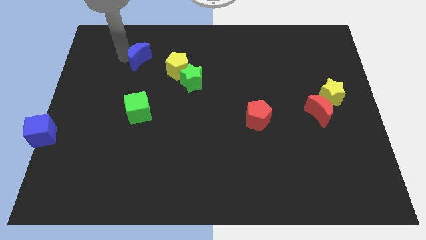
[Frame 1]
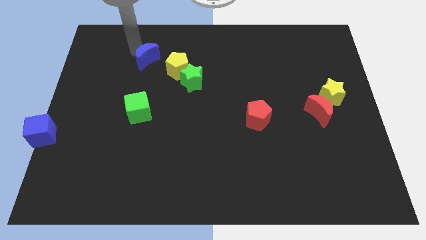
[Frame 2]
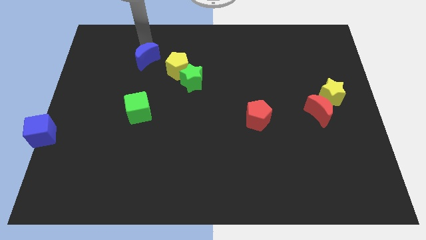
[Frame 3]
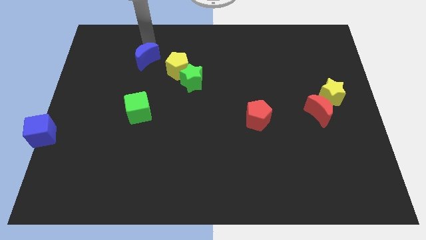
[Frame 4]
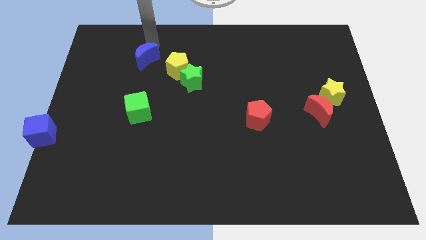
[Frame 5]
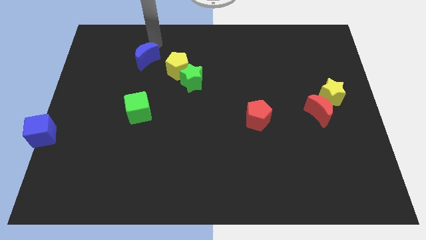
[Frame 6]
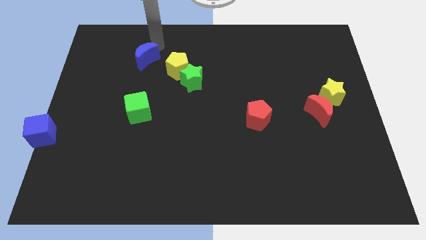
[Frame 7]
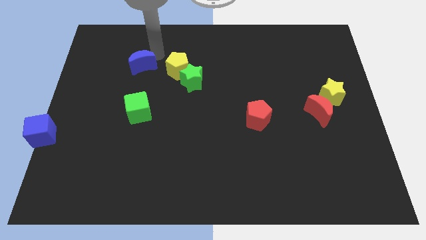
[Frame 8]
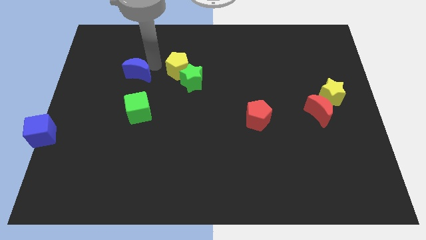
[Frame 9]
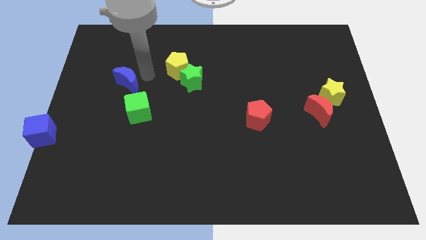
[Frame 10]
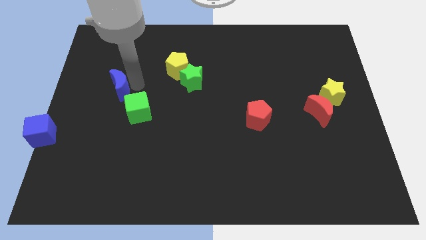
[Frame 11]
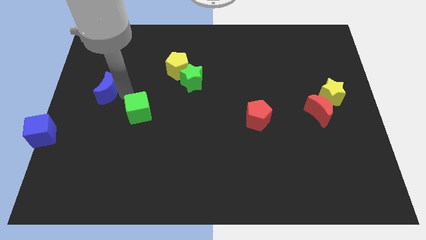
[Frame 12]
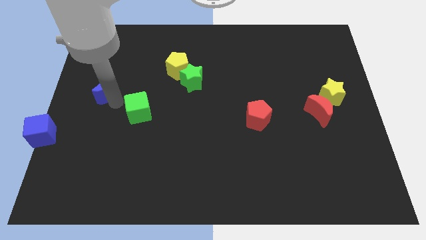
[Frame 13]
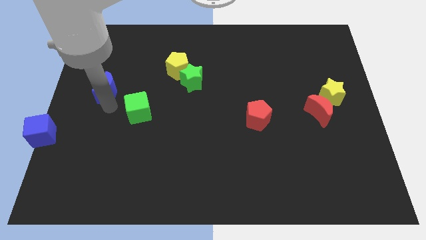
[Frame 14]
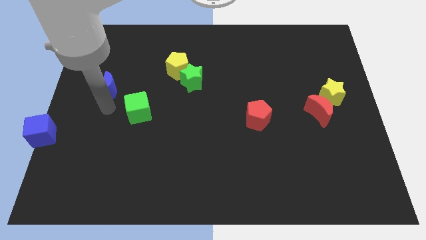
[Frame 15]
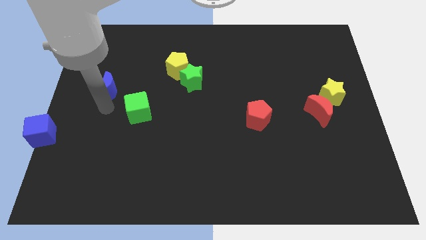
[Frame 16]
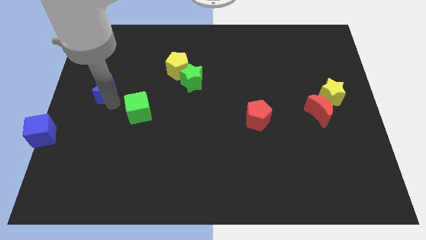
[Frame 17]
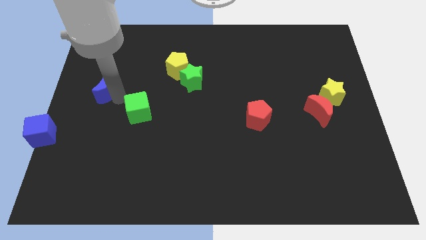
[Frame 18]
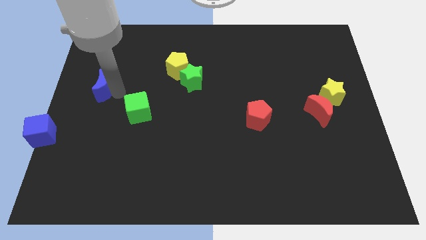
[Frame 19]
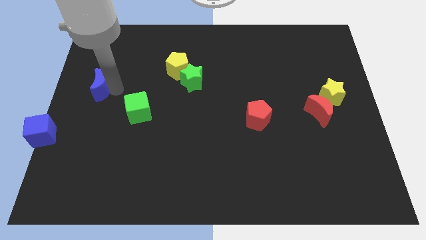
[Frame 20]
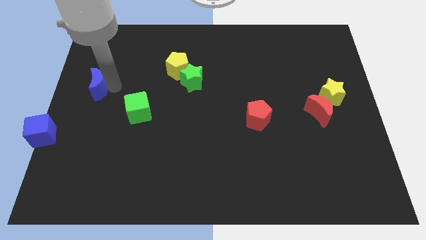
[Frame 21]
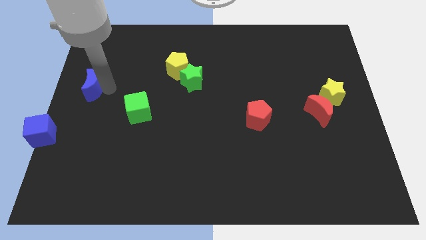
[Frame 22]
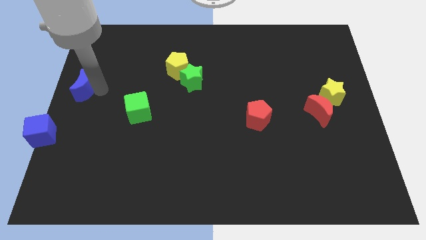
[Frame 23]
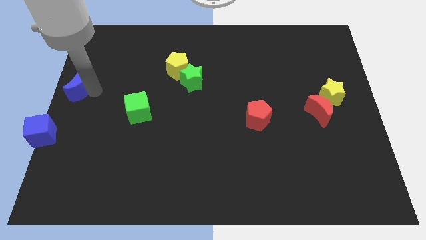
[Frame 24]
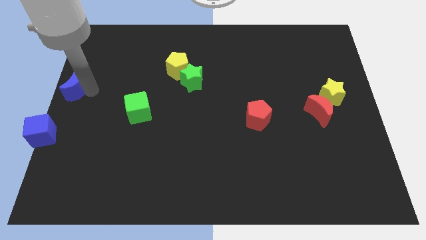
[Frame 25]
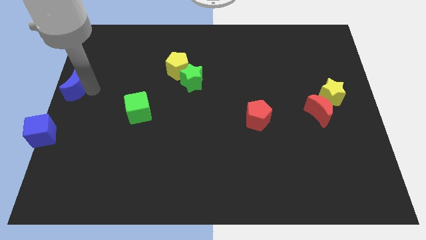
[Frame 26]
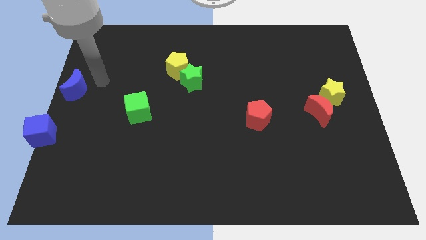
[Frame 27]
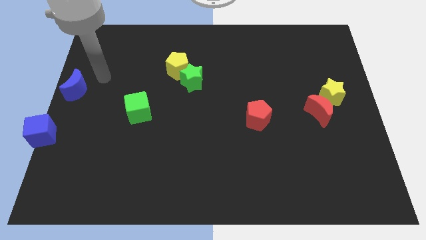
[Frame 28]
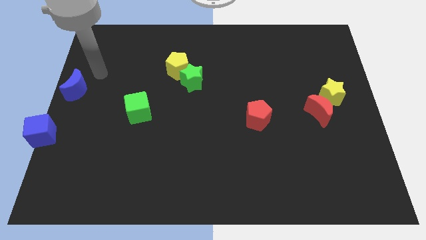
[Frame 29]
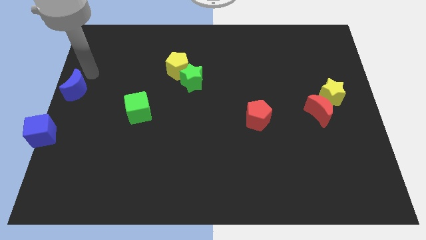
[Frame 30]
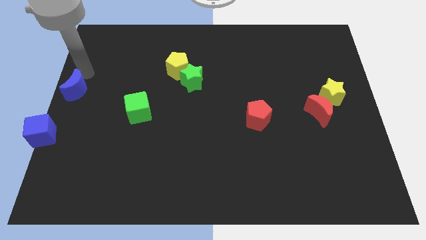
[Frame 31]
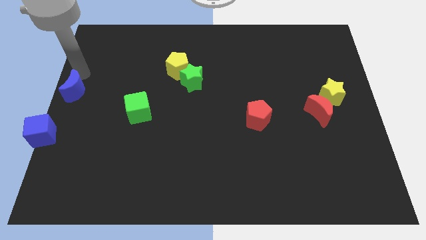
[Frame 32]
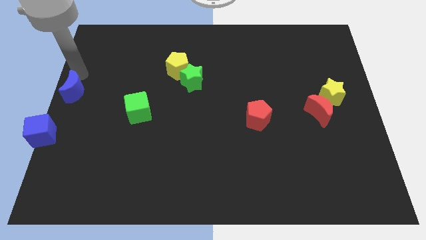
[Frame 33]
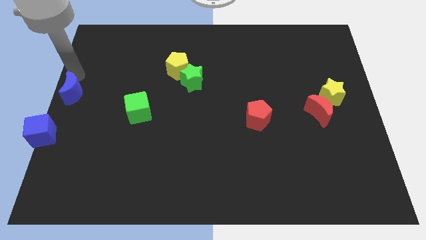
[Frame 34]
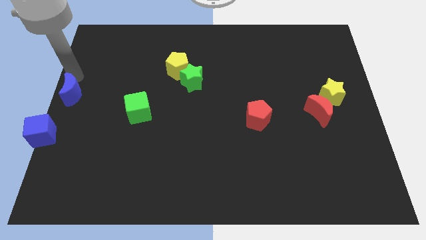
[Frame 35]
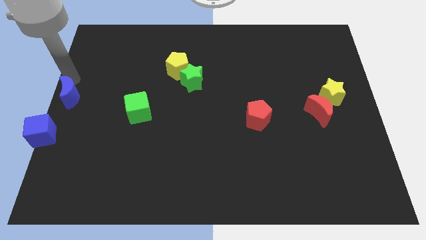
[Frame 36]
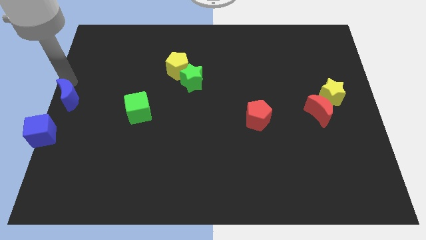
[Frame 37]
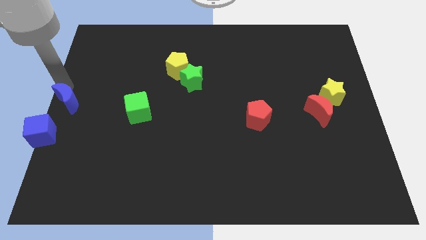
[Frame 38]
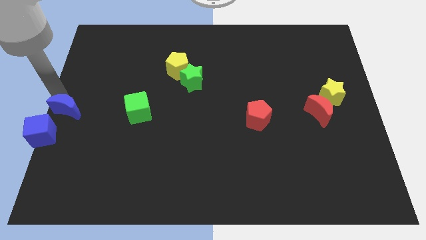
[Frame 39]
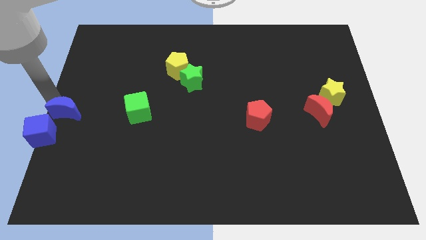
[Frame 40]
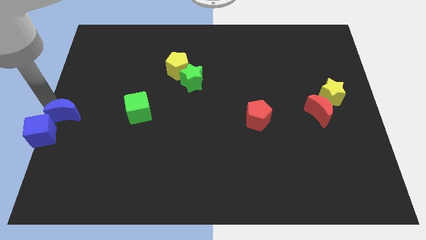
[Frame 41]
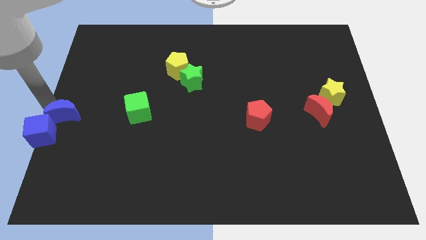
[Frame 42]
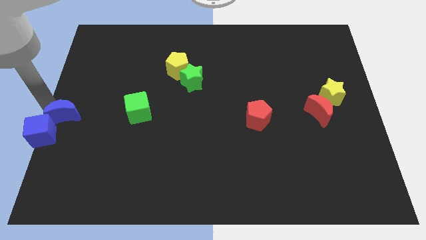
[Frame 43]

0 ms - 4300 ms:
move the blue moon above into the blue cube

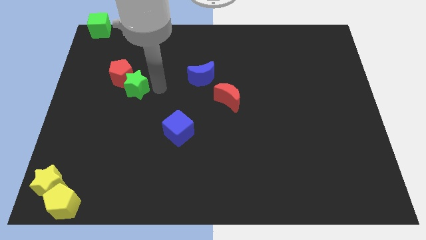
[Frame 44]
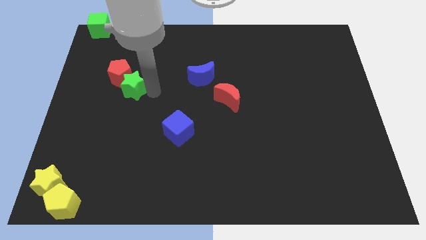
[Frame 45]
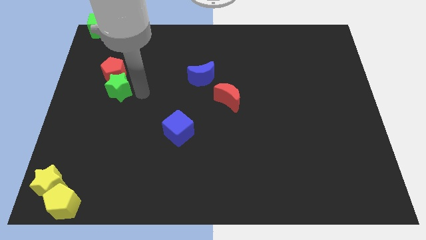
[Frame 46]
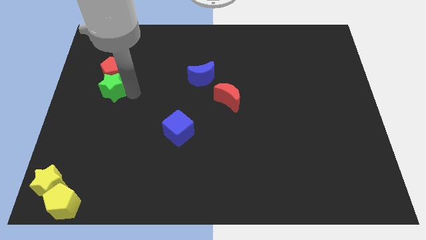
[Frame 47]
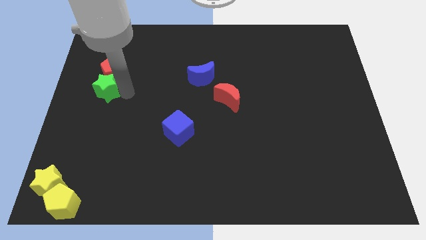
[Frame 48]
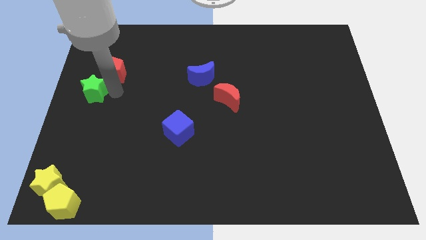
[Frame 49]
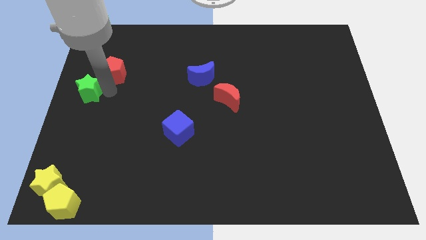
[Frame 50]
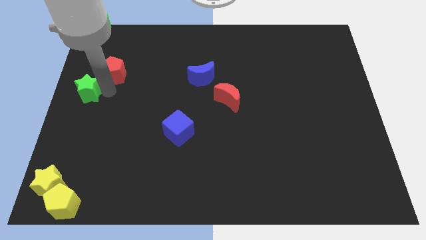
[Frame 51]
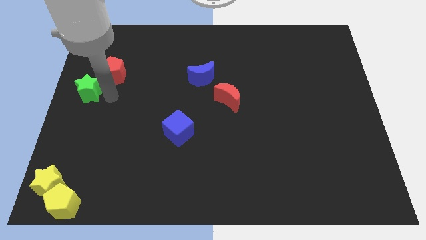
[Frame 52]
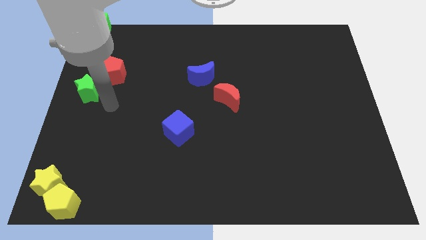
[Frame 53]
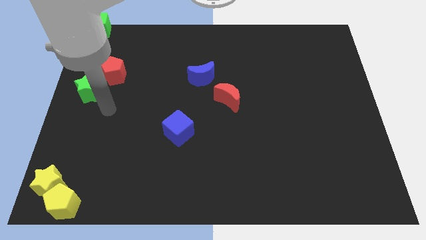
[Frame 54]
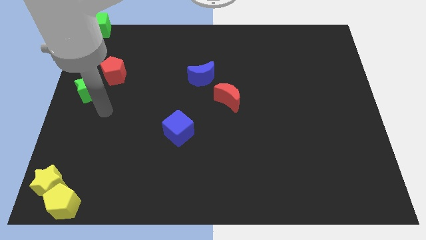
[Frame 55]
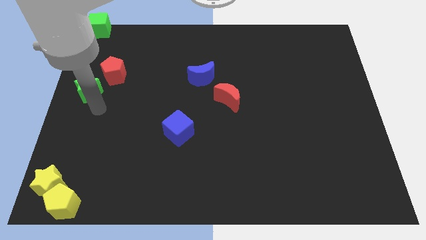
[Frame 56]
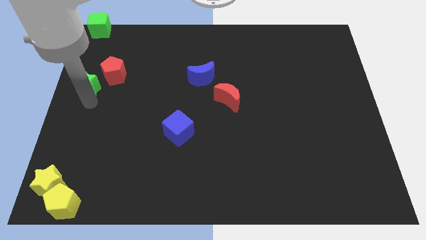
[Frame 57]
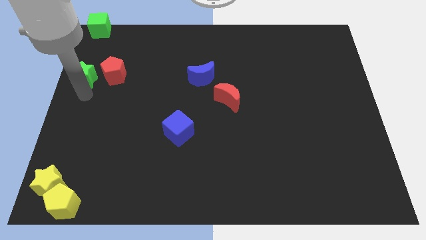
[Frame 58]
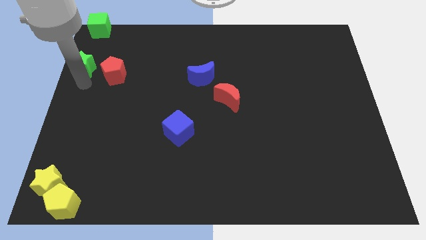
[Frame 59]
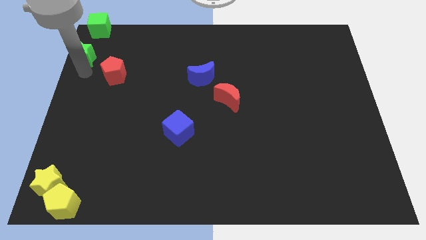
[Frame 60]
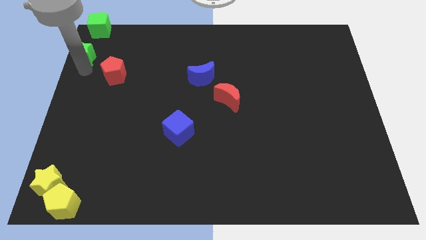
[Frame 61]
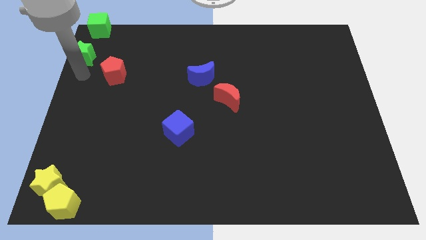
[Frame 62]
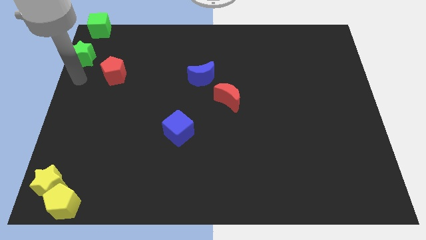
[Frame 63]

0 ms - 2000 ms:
move the green star diagonally top left to the red pentagon

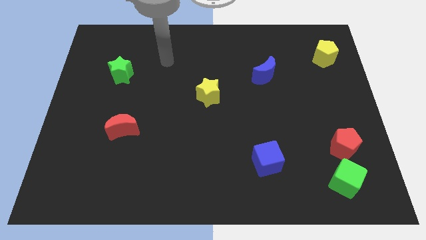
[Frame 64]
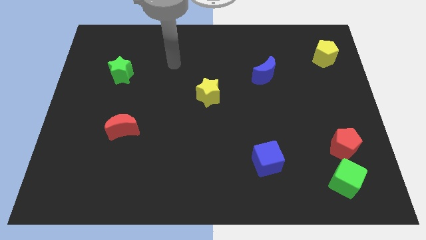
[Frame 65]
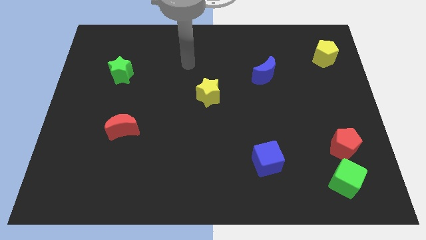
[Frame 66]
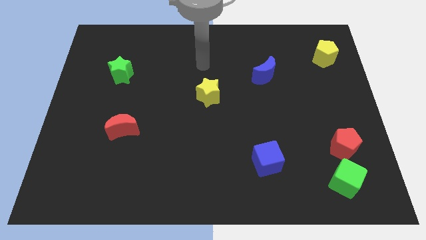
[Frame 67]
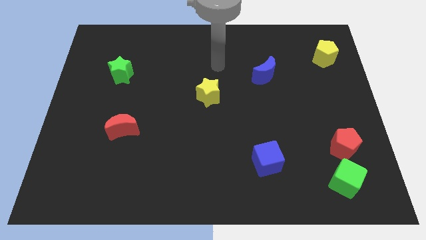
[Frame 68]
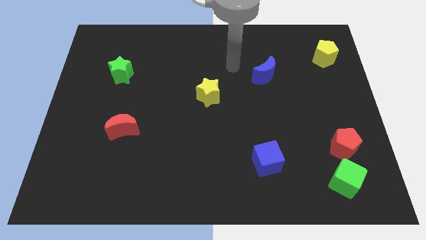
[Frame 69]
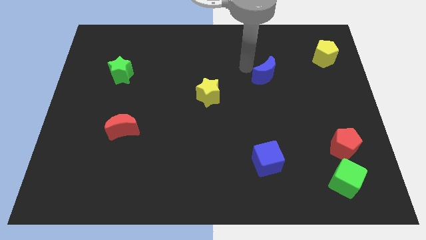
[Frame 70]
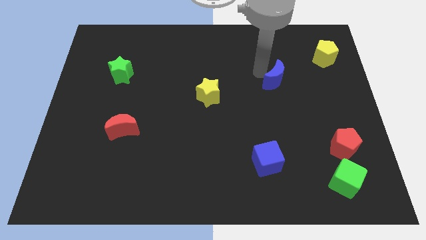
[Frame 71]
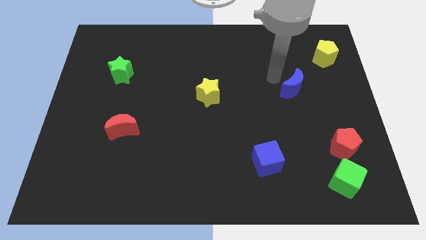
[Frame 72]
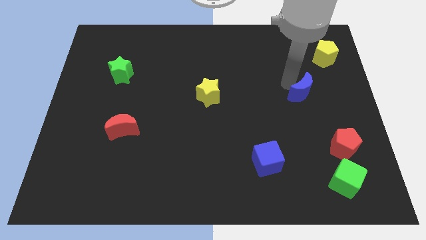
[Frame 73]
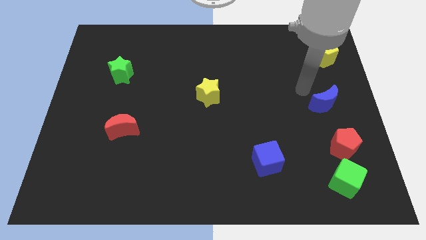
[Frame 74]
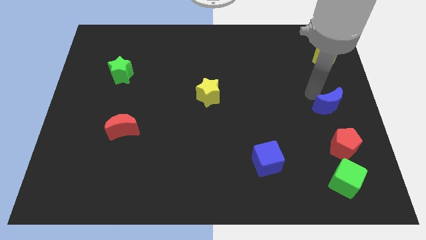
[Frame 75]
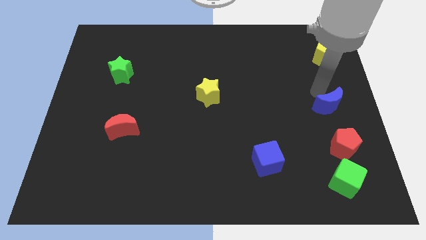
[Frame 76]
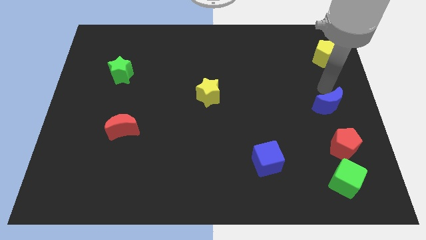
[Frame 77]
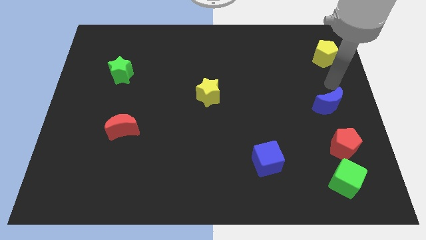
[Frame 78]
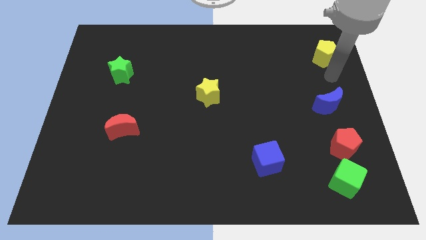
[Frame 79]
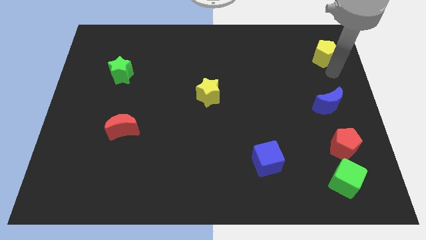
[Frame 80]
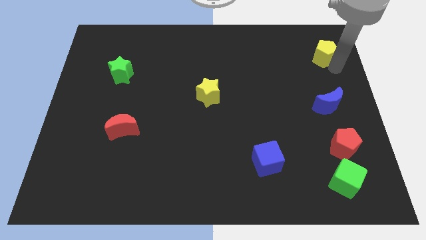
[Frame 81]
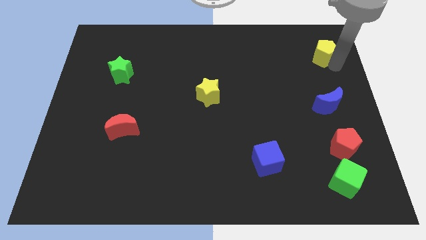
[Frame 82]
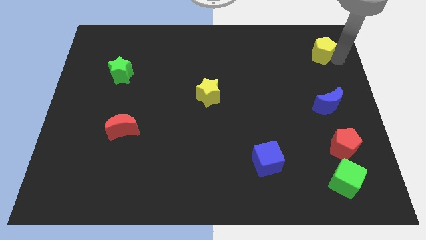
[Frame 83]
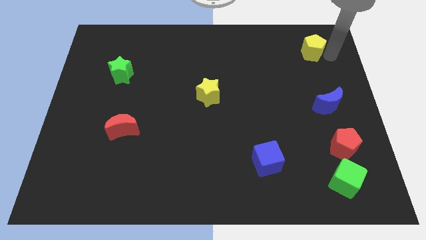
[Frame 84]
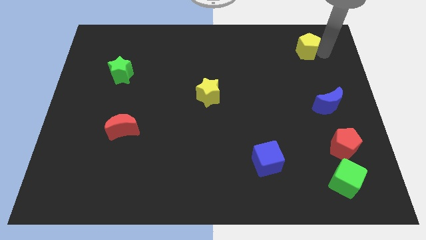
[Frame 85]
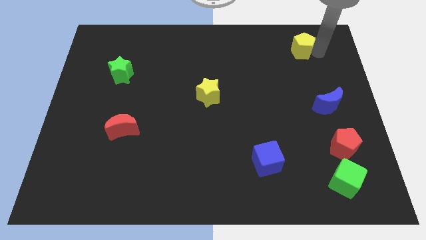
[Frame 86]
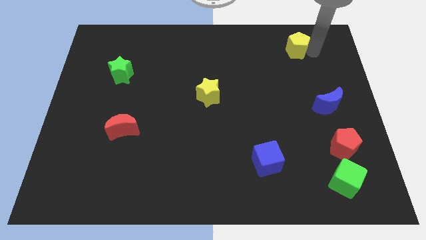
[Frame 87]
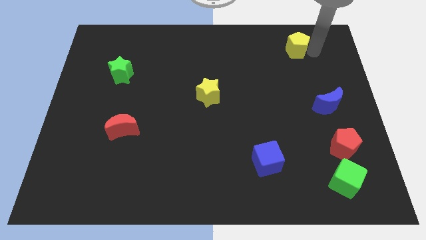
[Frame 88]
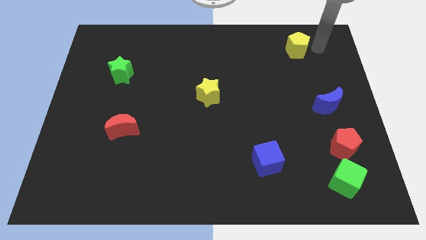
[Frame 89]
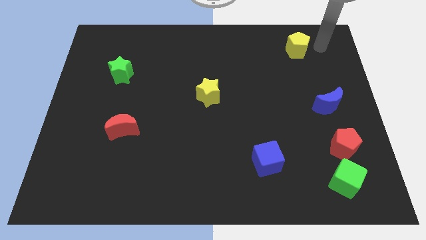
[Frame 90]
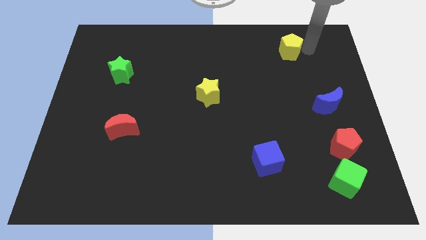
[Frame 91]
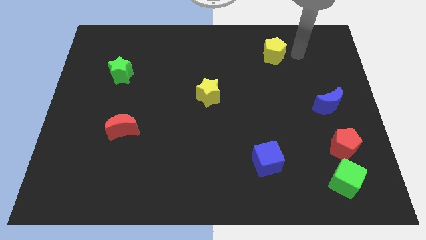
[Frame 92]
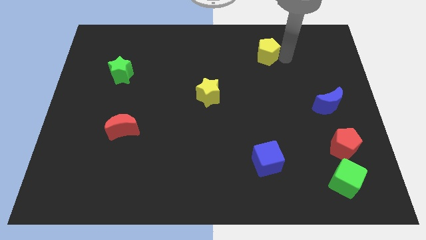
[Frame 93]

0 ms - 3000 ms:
move the blue moon above red pentagon
